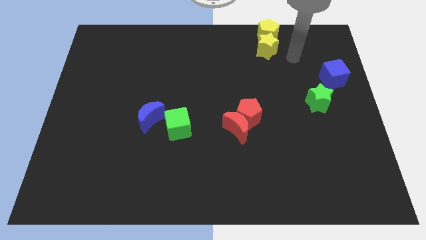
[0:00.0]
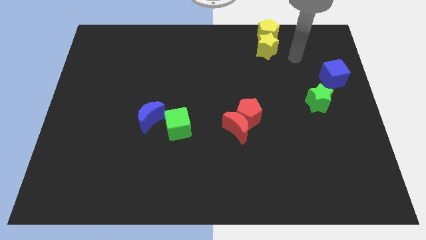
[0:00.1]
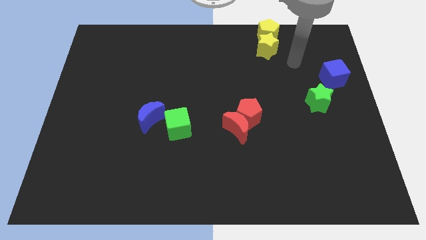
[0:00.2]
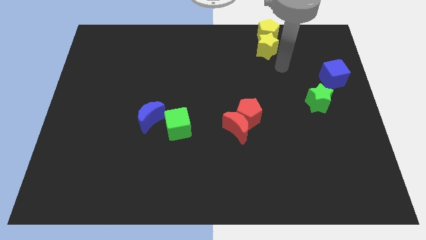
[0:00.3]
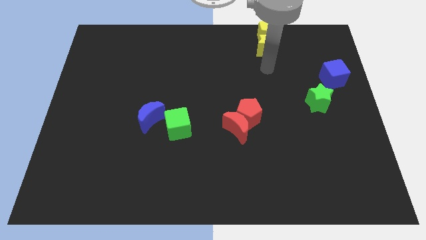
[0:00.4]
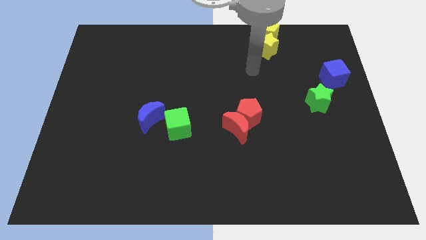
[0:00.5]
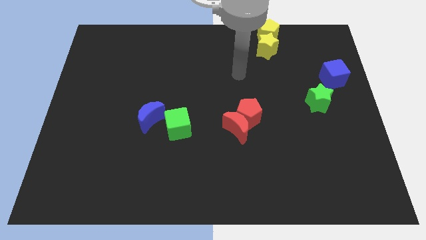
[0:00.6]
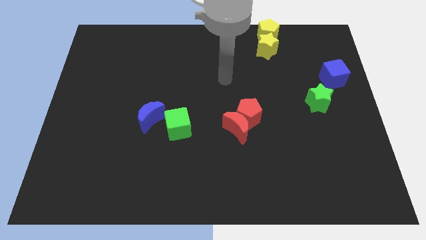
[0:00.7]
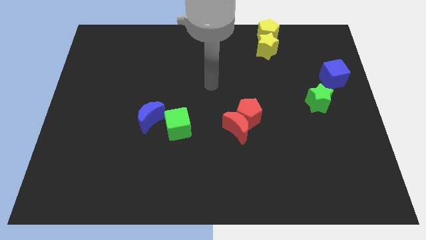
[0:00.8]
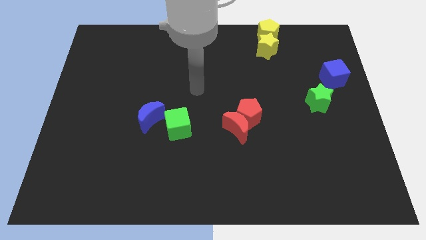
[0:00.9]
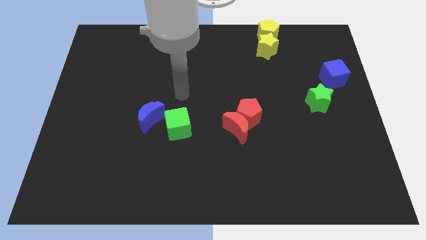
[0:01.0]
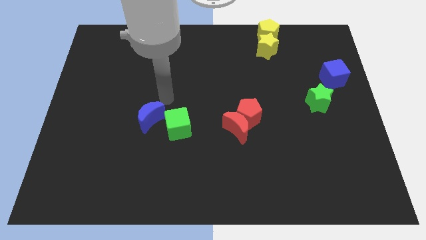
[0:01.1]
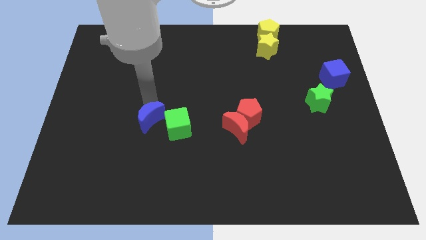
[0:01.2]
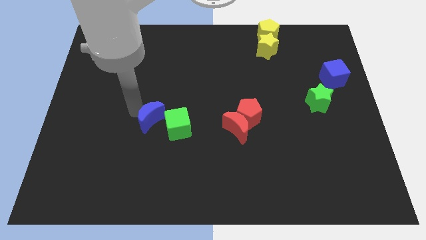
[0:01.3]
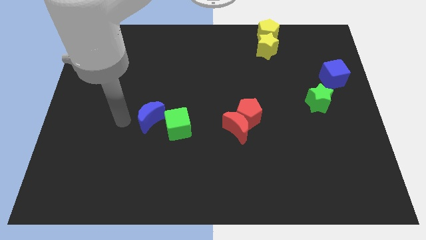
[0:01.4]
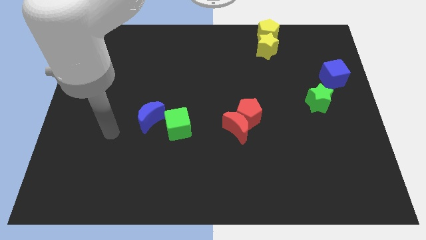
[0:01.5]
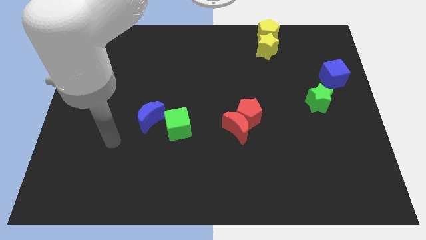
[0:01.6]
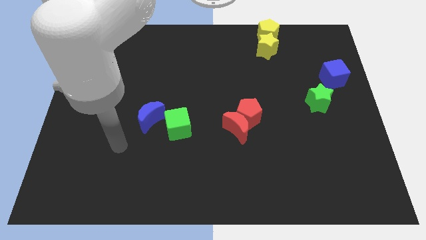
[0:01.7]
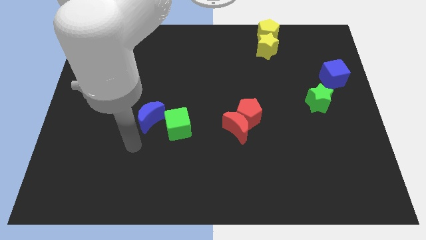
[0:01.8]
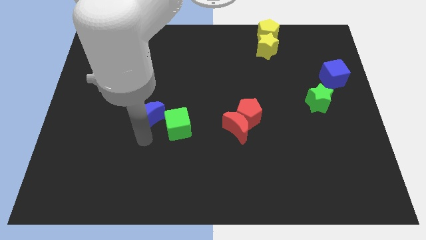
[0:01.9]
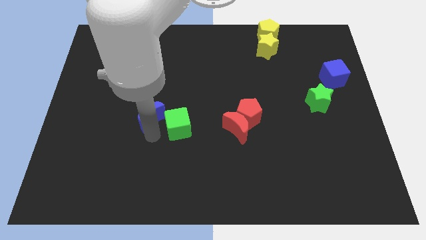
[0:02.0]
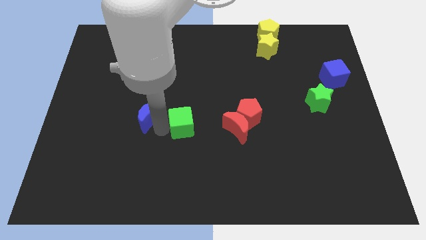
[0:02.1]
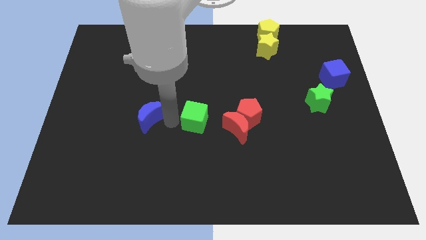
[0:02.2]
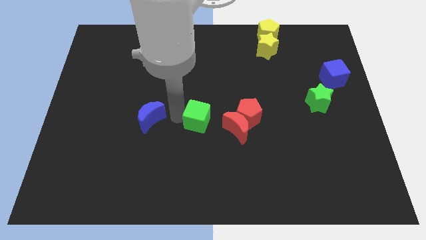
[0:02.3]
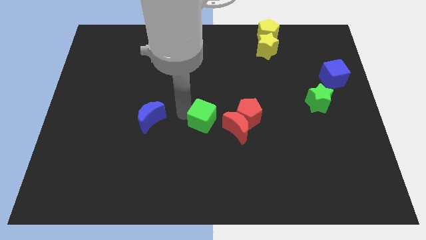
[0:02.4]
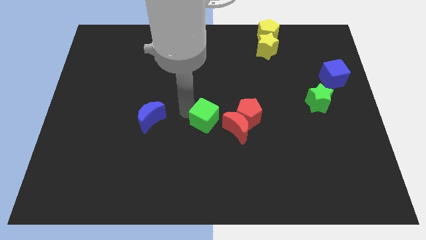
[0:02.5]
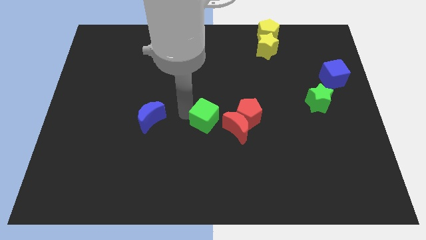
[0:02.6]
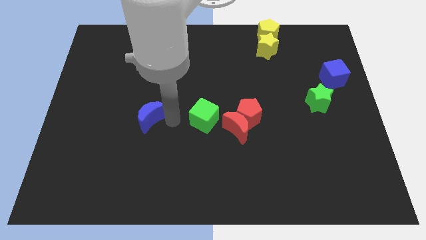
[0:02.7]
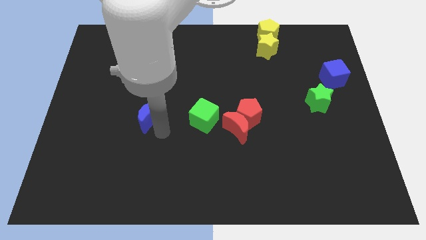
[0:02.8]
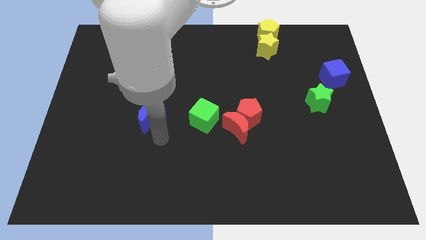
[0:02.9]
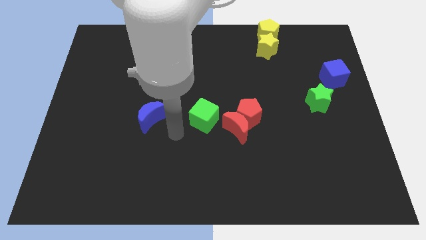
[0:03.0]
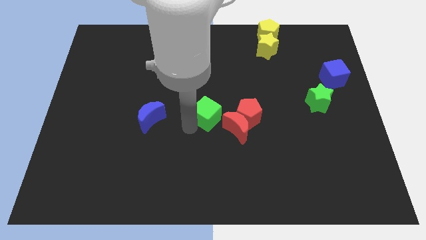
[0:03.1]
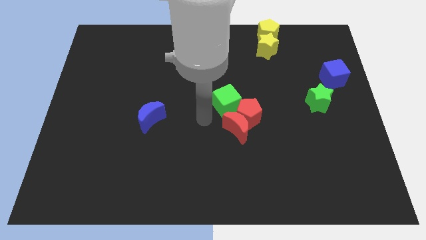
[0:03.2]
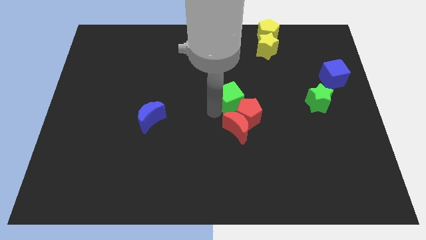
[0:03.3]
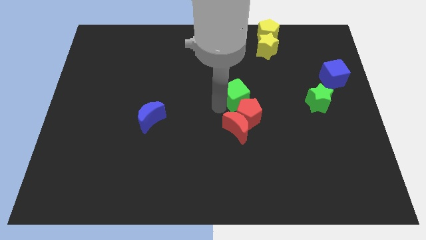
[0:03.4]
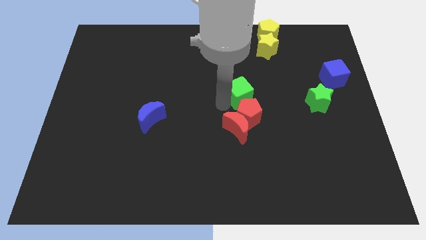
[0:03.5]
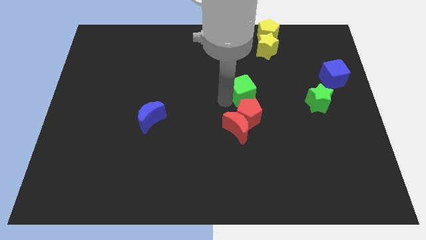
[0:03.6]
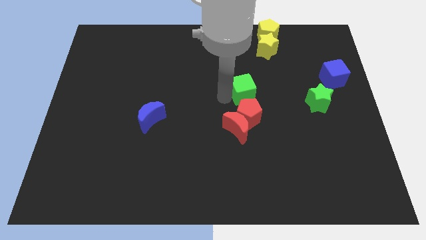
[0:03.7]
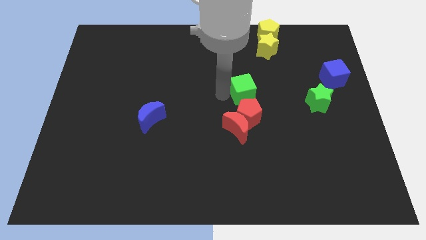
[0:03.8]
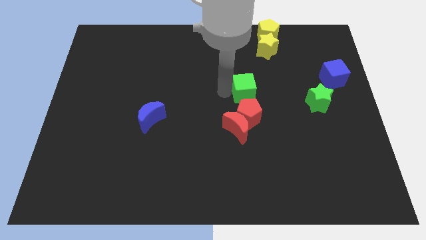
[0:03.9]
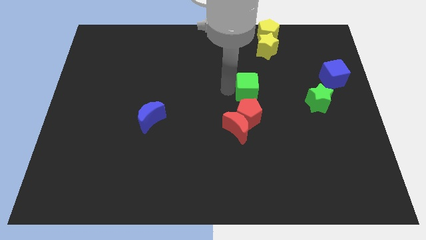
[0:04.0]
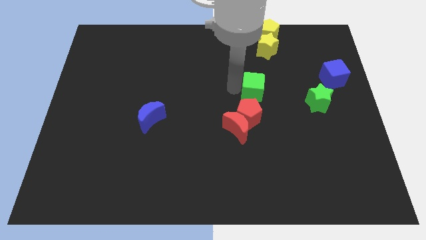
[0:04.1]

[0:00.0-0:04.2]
place the green cube above the red pentagon

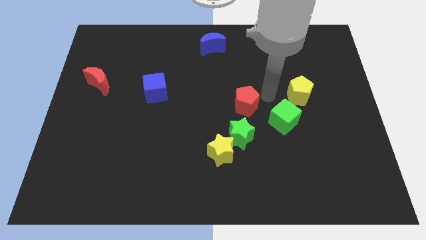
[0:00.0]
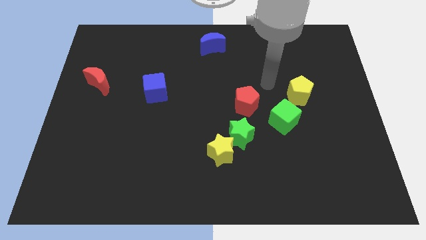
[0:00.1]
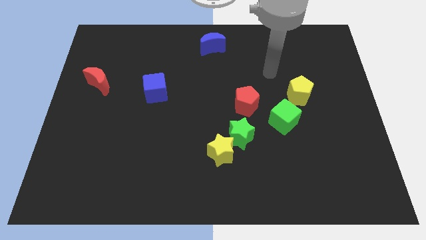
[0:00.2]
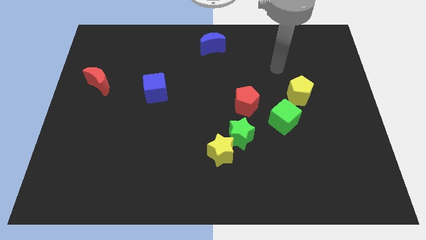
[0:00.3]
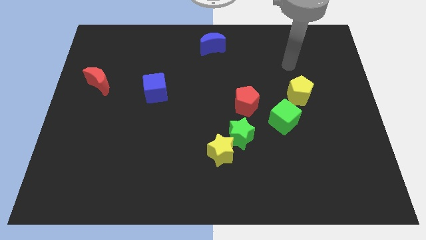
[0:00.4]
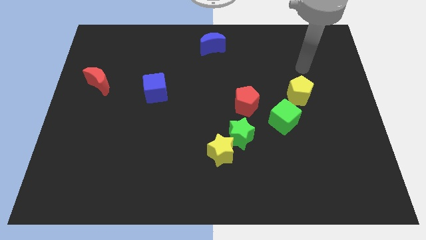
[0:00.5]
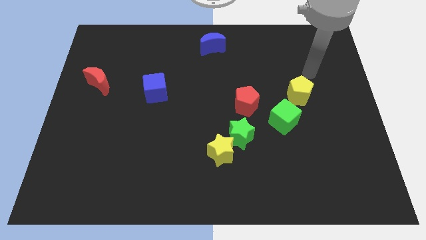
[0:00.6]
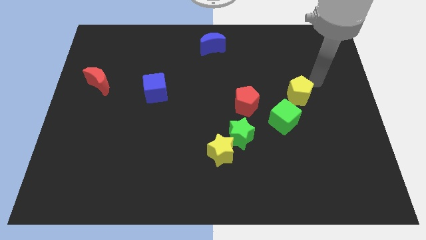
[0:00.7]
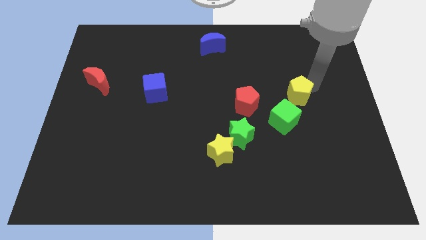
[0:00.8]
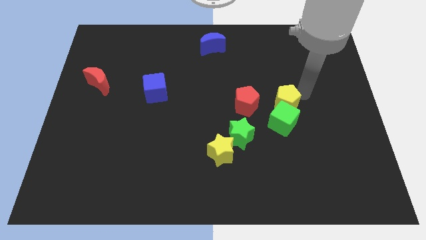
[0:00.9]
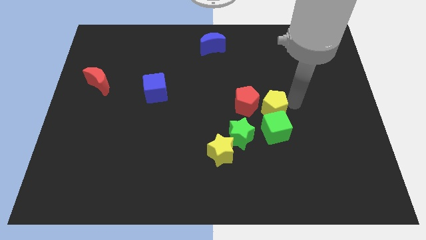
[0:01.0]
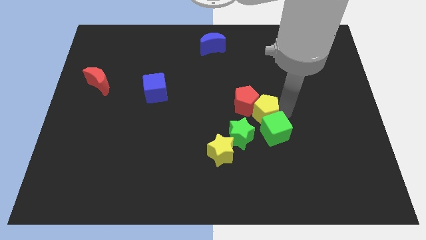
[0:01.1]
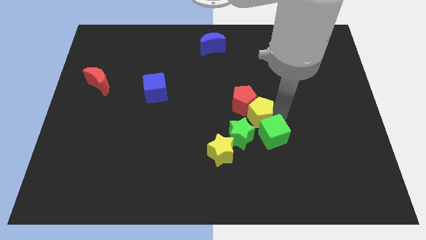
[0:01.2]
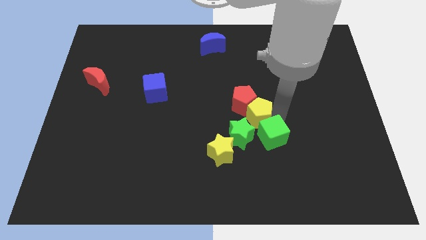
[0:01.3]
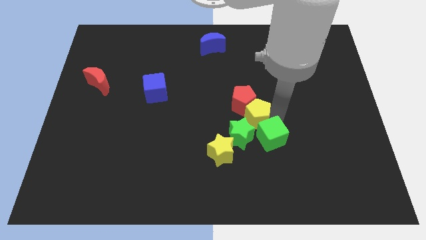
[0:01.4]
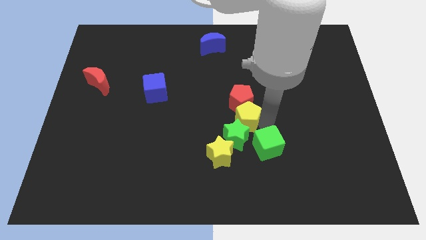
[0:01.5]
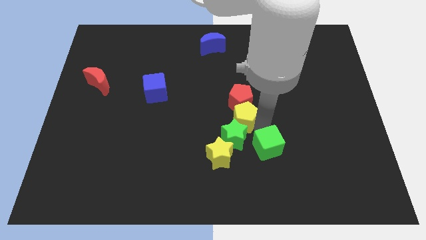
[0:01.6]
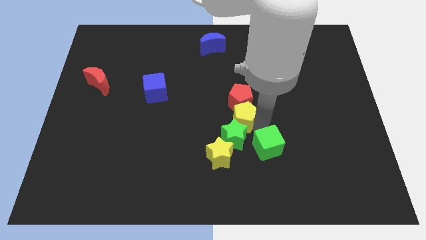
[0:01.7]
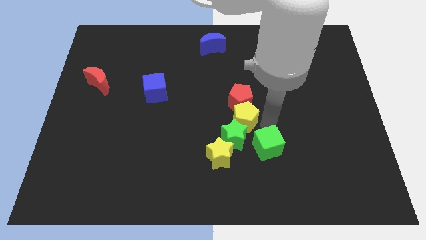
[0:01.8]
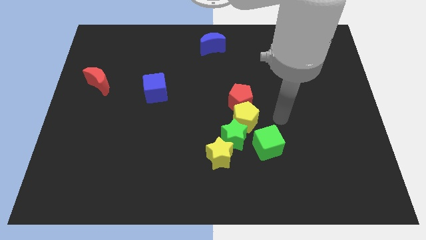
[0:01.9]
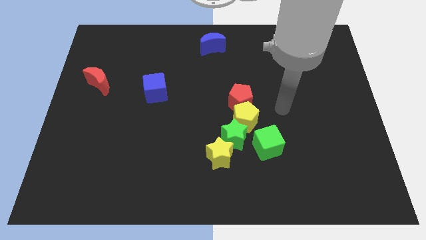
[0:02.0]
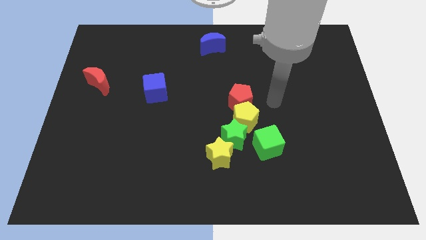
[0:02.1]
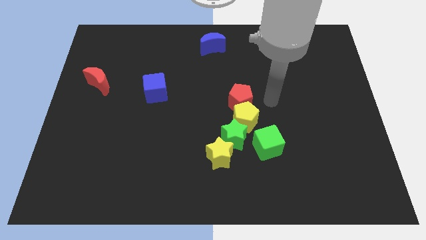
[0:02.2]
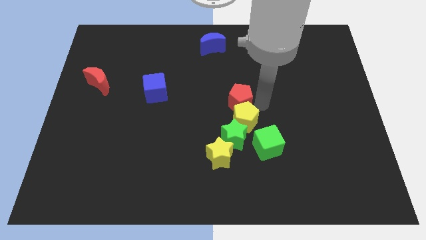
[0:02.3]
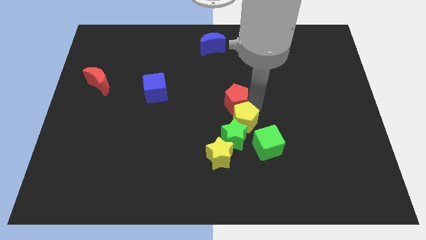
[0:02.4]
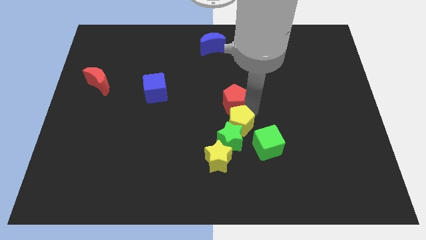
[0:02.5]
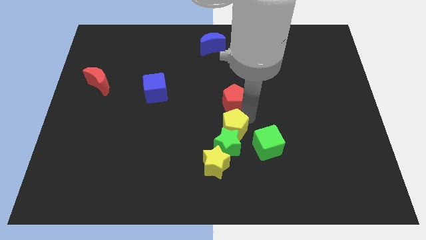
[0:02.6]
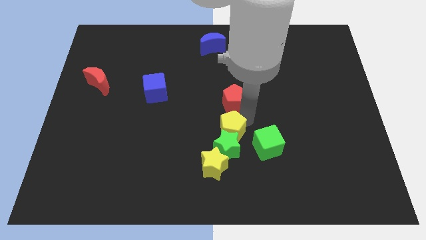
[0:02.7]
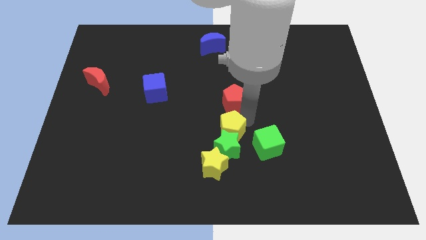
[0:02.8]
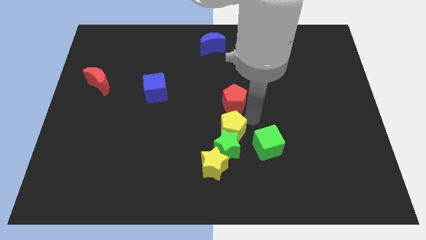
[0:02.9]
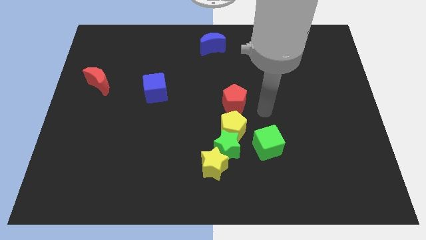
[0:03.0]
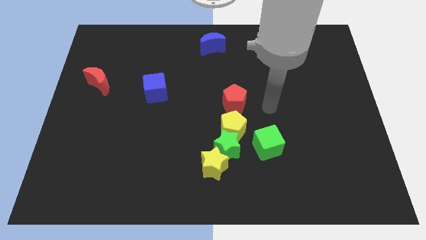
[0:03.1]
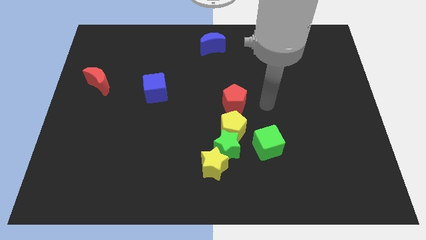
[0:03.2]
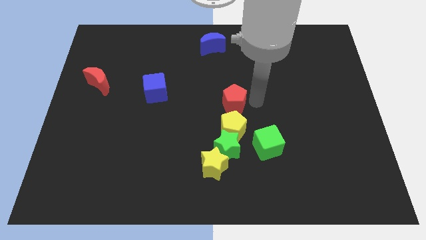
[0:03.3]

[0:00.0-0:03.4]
put the yellow pentagon vertically below the red pentagon

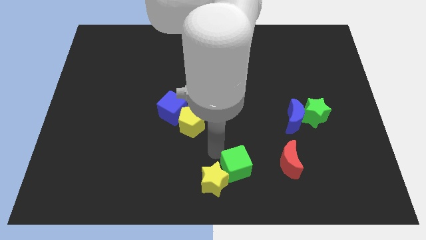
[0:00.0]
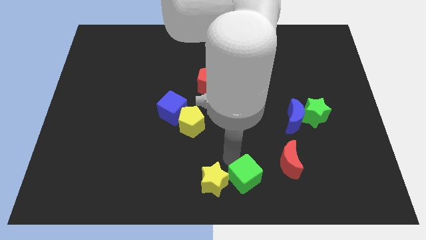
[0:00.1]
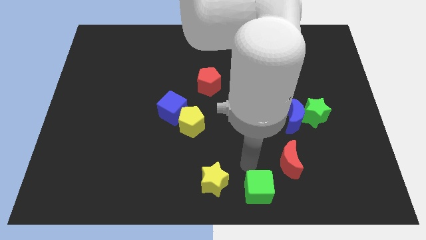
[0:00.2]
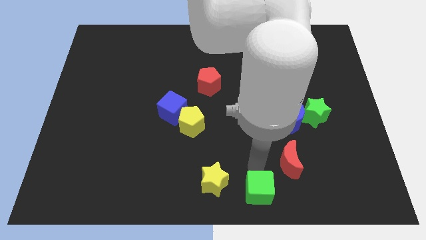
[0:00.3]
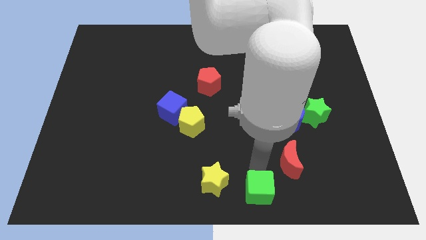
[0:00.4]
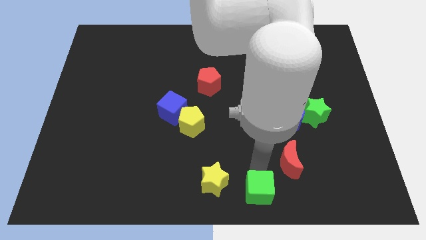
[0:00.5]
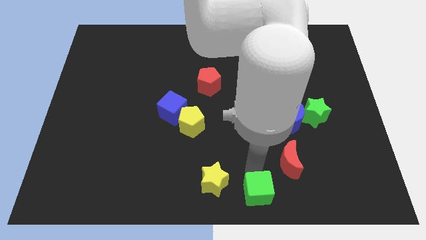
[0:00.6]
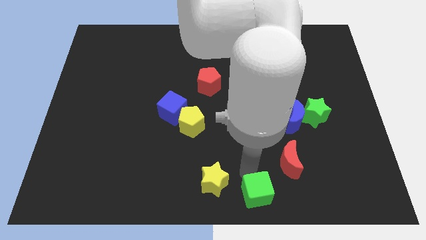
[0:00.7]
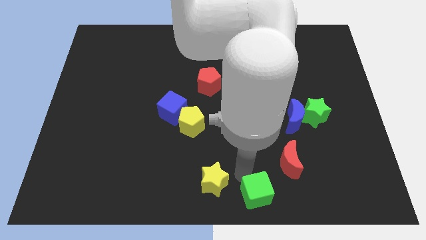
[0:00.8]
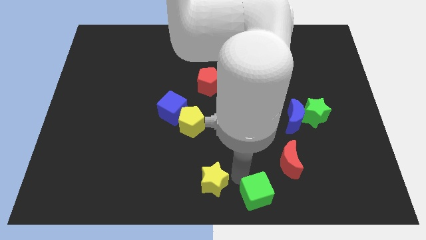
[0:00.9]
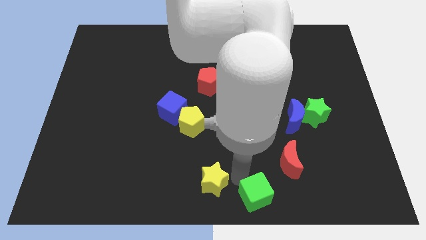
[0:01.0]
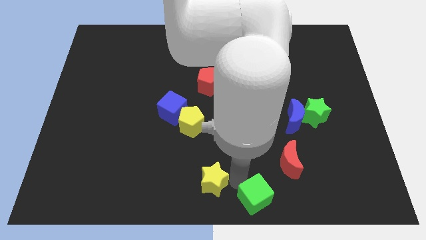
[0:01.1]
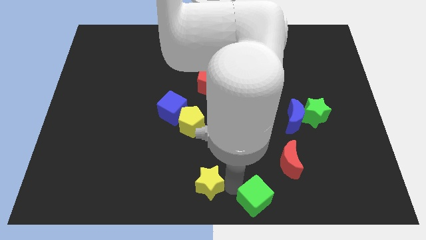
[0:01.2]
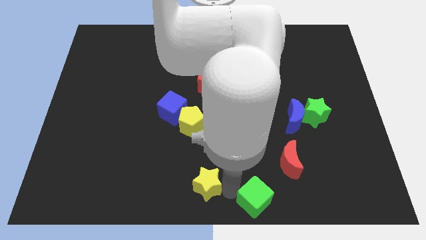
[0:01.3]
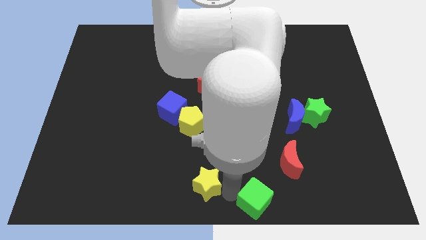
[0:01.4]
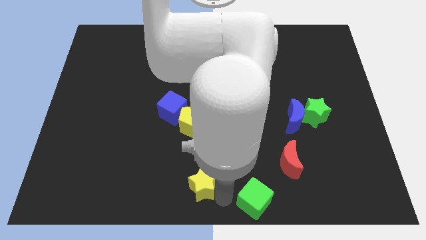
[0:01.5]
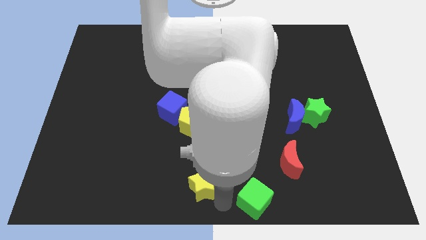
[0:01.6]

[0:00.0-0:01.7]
separate the green cube from the yellow star
